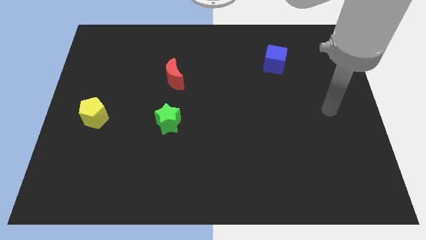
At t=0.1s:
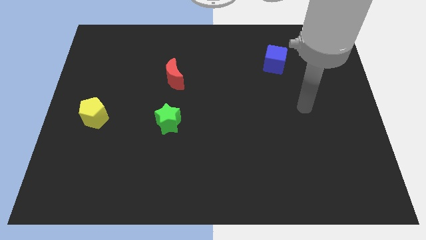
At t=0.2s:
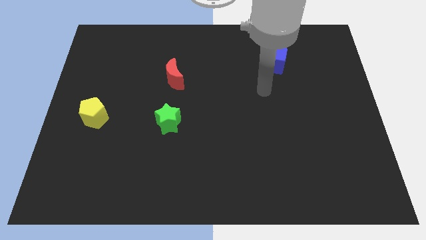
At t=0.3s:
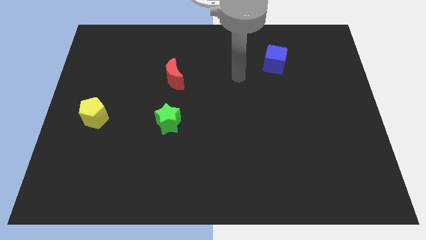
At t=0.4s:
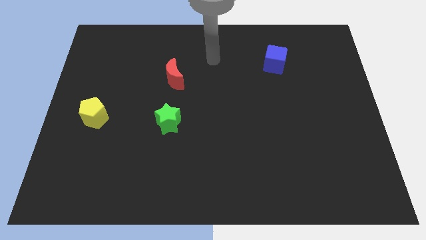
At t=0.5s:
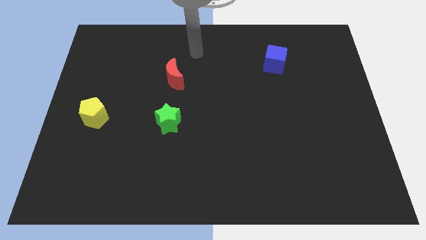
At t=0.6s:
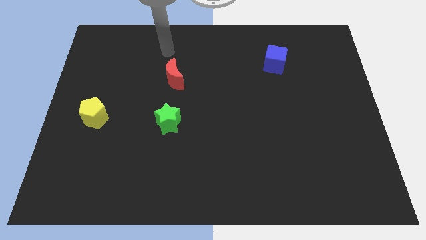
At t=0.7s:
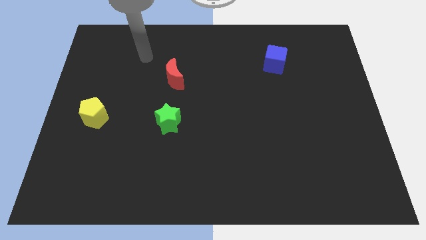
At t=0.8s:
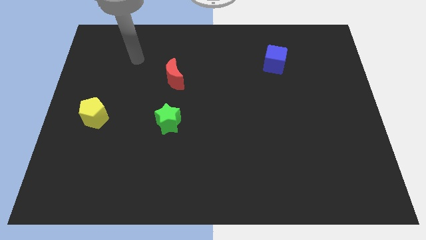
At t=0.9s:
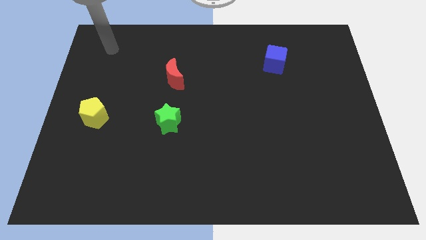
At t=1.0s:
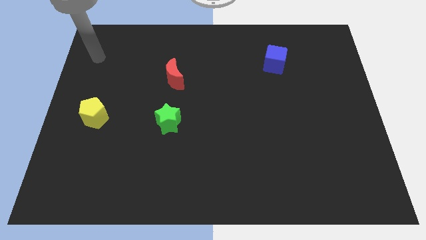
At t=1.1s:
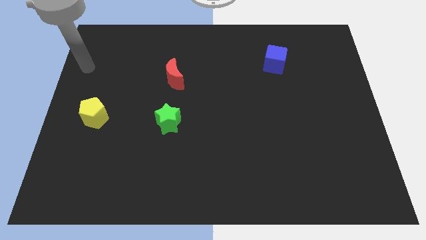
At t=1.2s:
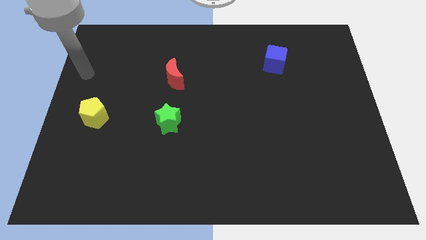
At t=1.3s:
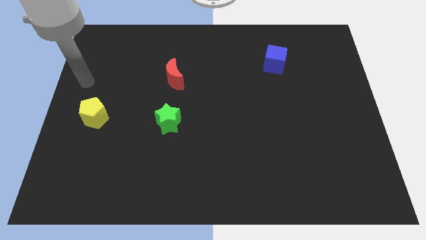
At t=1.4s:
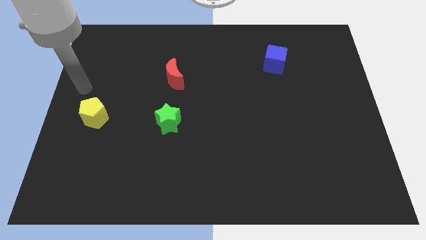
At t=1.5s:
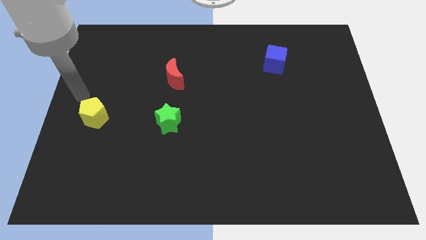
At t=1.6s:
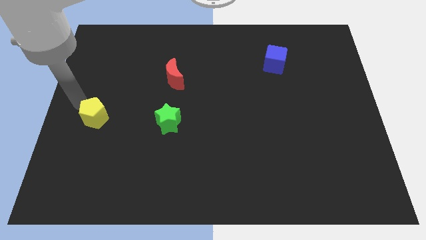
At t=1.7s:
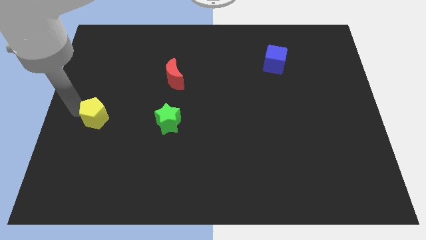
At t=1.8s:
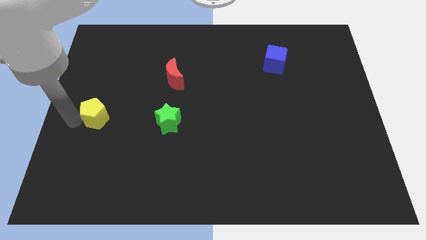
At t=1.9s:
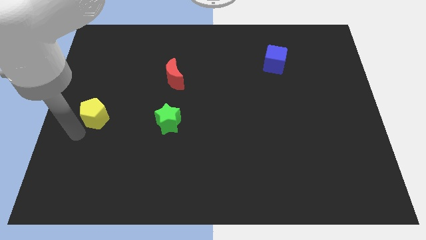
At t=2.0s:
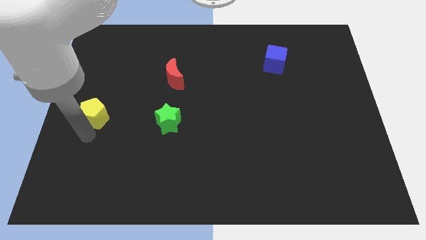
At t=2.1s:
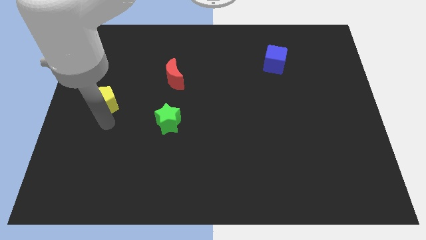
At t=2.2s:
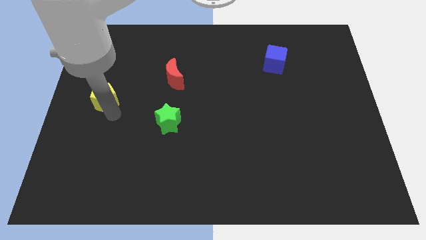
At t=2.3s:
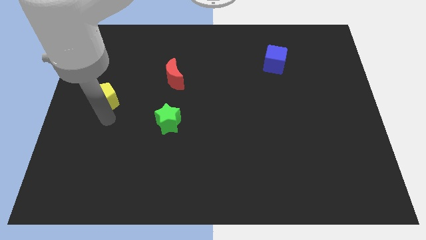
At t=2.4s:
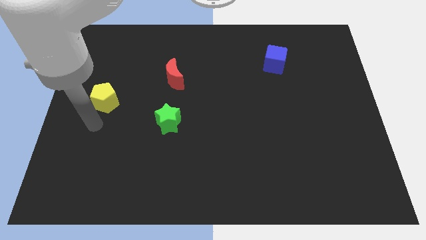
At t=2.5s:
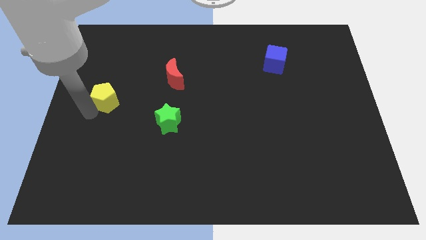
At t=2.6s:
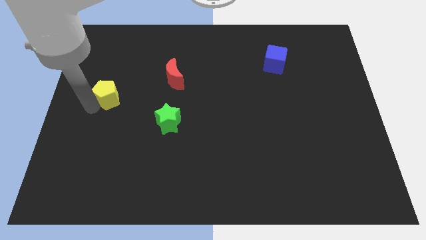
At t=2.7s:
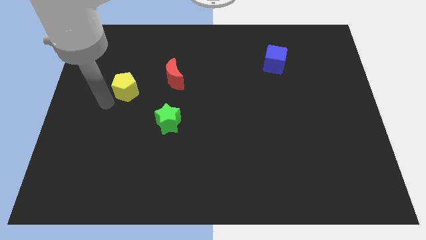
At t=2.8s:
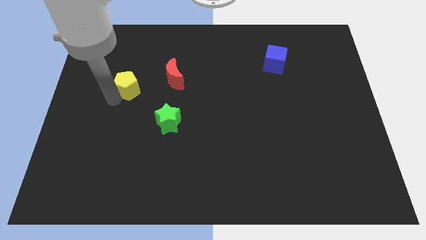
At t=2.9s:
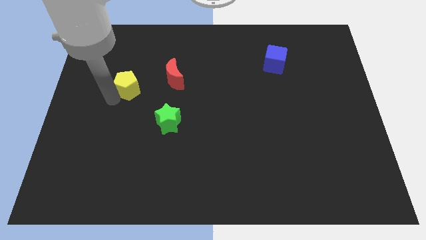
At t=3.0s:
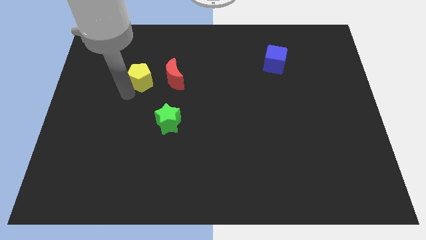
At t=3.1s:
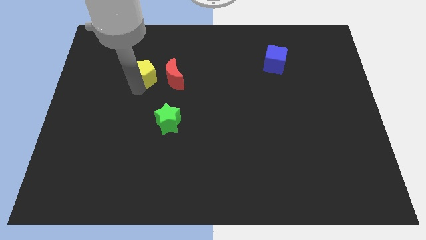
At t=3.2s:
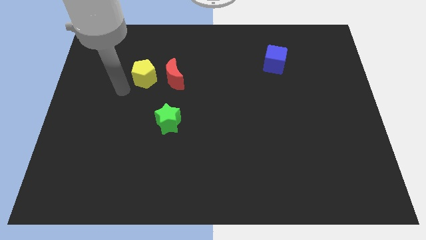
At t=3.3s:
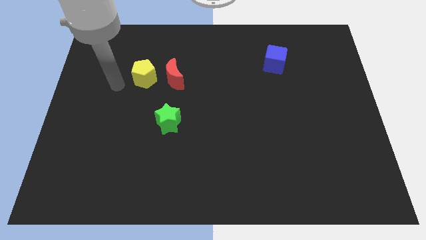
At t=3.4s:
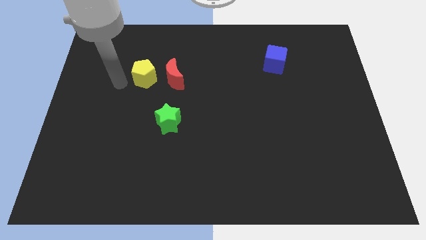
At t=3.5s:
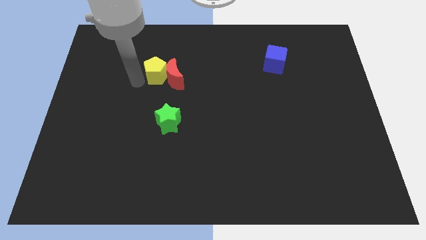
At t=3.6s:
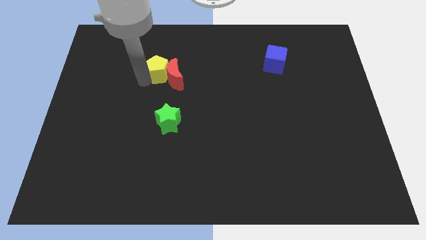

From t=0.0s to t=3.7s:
put the pentagon next to the red moon

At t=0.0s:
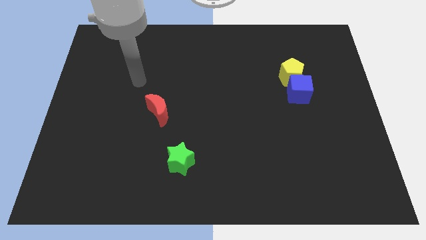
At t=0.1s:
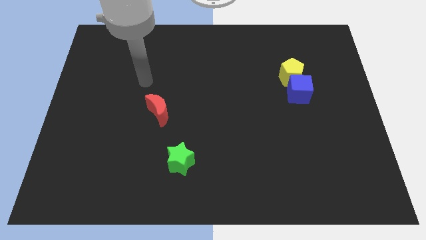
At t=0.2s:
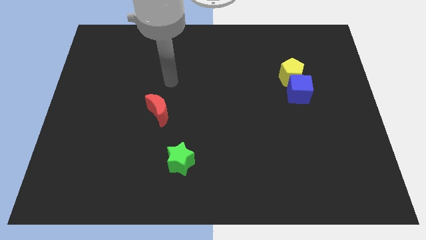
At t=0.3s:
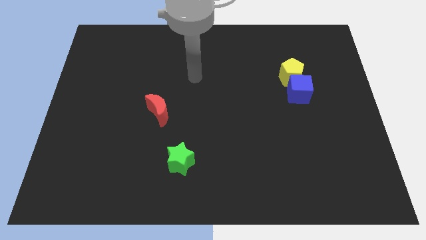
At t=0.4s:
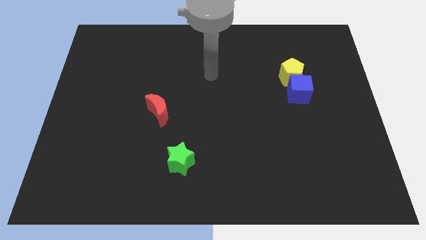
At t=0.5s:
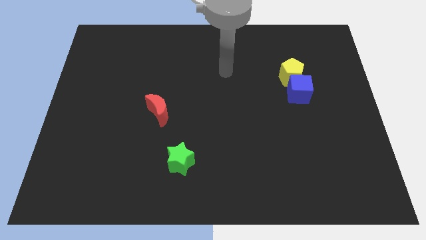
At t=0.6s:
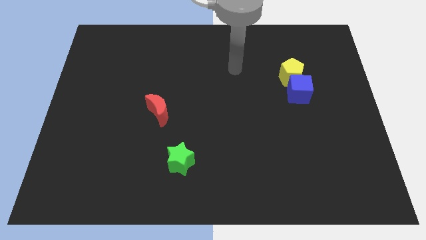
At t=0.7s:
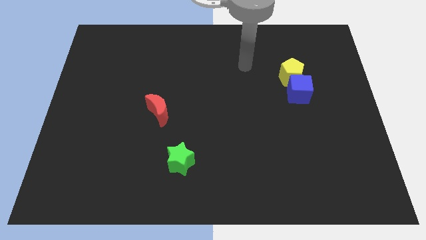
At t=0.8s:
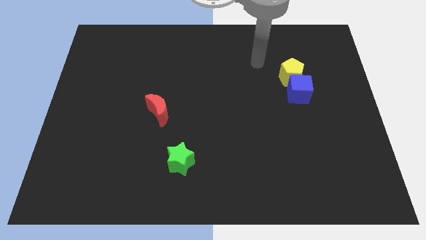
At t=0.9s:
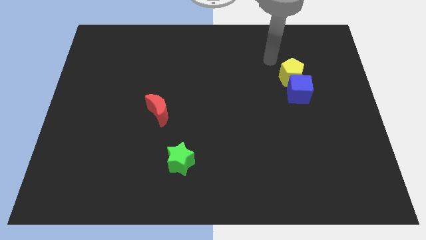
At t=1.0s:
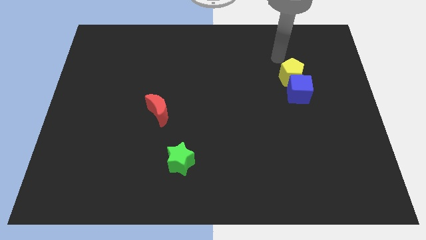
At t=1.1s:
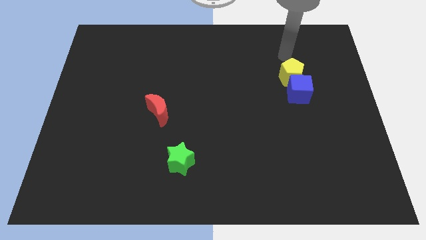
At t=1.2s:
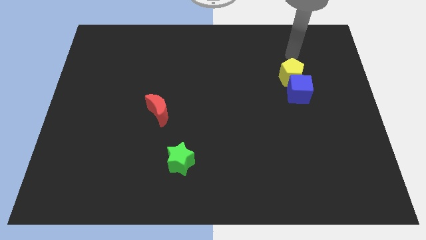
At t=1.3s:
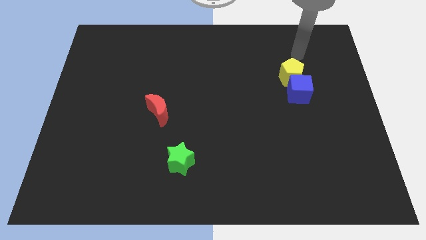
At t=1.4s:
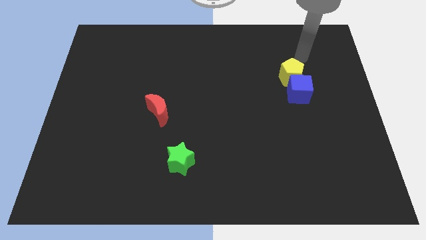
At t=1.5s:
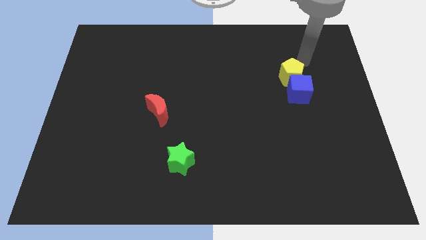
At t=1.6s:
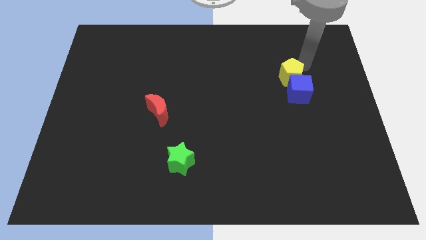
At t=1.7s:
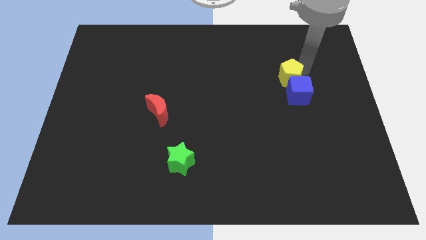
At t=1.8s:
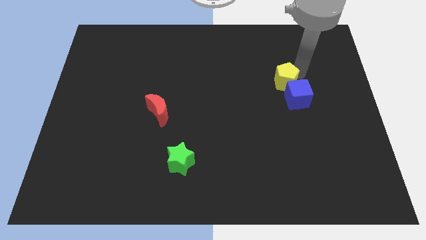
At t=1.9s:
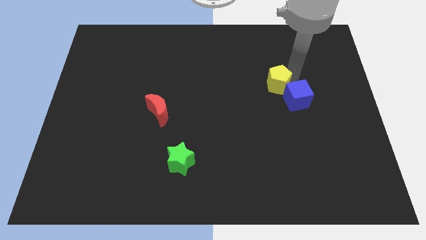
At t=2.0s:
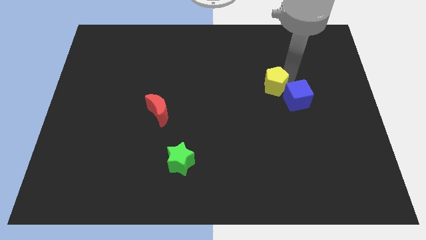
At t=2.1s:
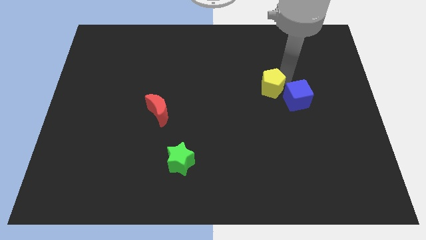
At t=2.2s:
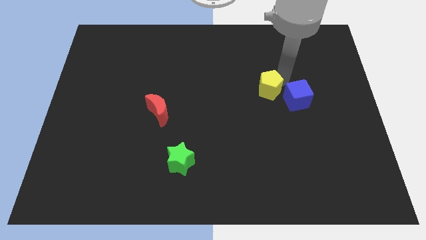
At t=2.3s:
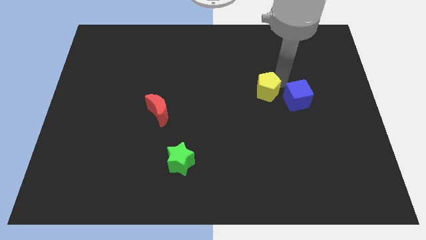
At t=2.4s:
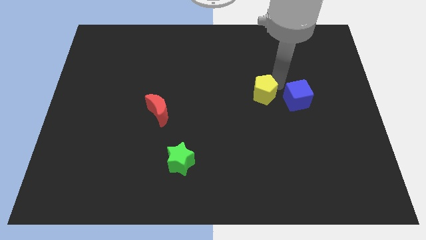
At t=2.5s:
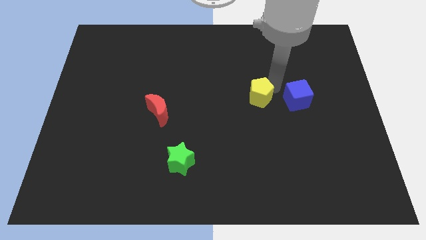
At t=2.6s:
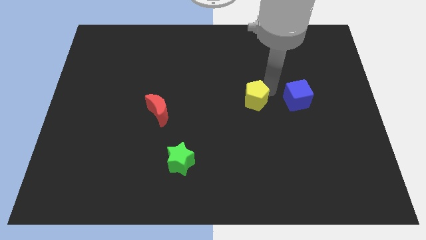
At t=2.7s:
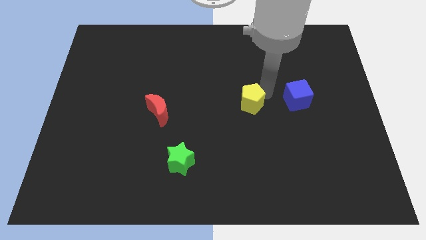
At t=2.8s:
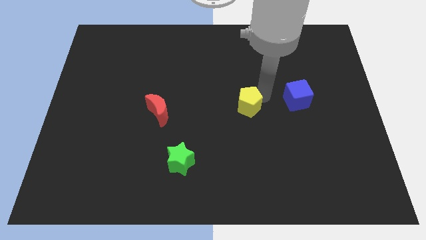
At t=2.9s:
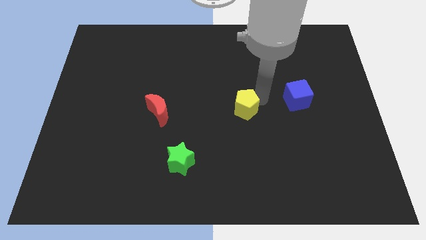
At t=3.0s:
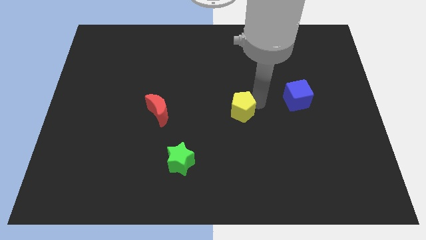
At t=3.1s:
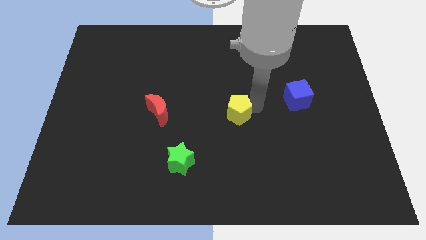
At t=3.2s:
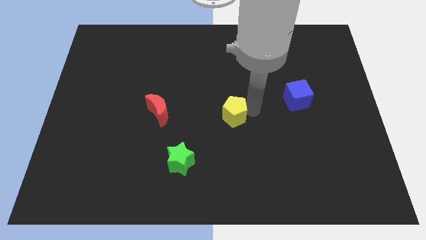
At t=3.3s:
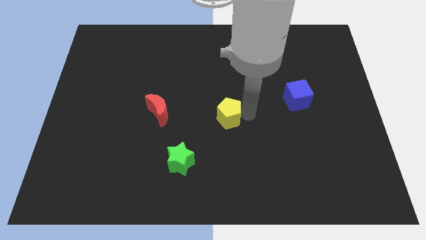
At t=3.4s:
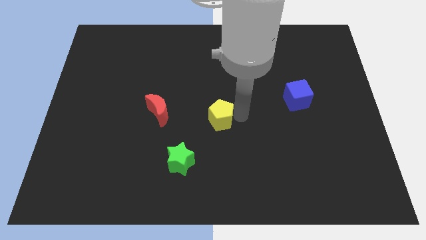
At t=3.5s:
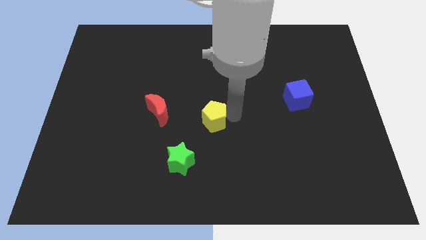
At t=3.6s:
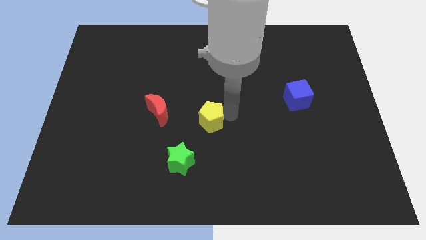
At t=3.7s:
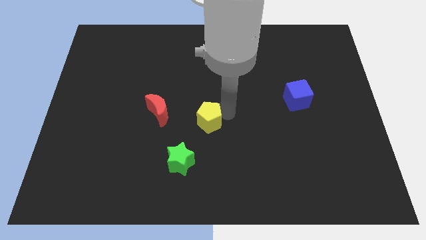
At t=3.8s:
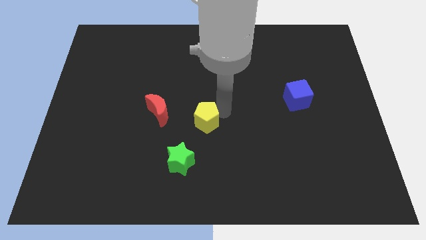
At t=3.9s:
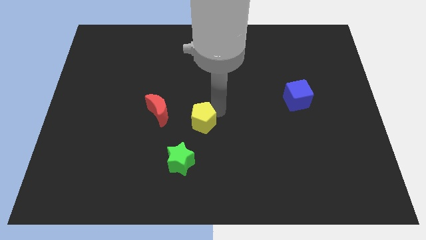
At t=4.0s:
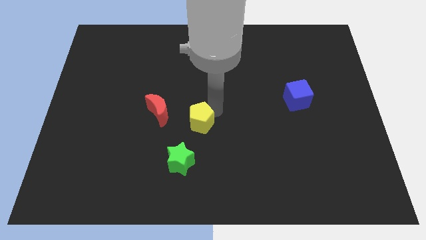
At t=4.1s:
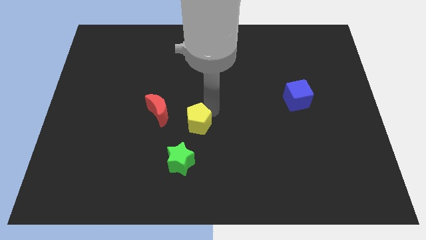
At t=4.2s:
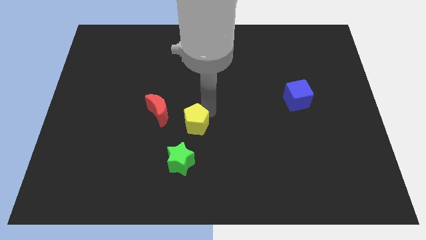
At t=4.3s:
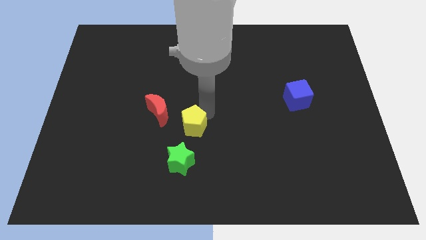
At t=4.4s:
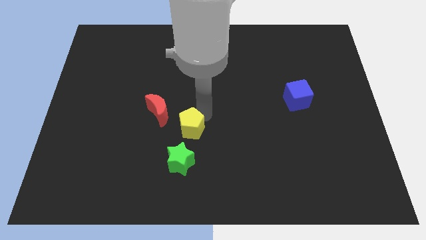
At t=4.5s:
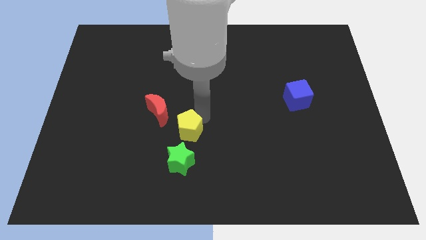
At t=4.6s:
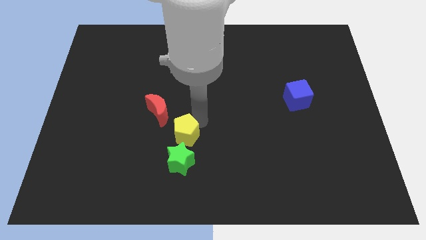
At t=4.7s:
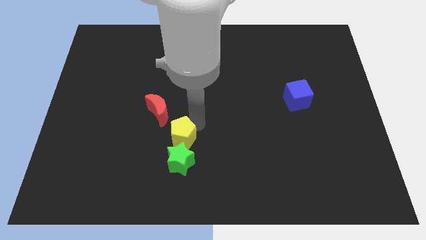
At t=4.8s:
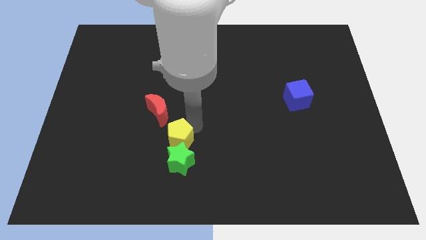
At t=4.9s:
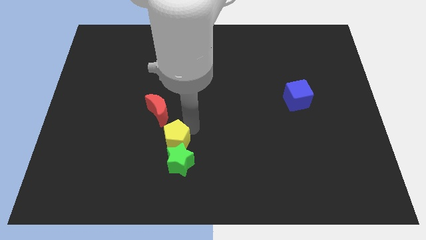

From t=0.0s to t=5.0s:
move the yellow pentagon close to the green star

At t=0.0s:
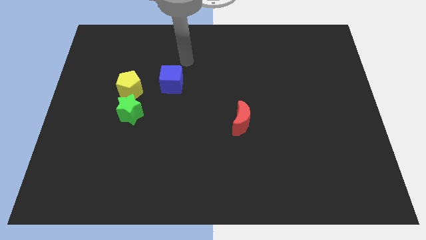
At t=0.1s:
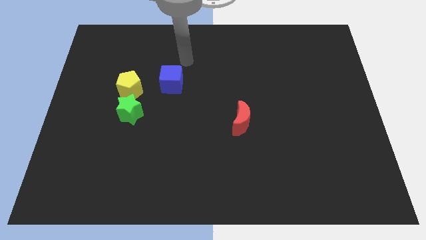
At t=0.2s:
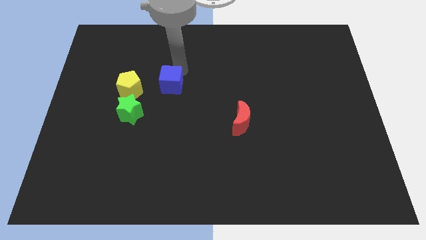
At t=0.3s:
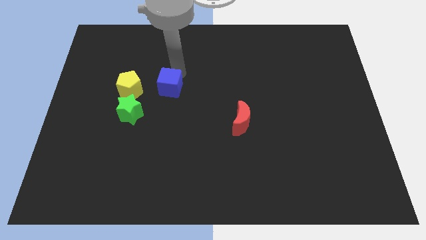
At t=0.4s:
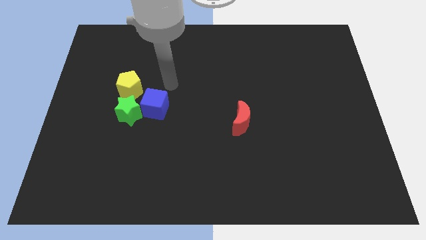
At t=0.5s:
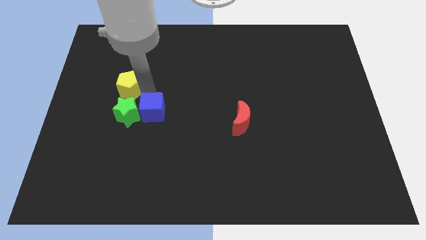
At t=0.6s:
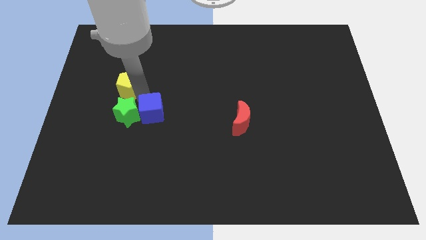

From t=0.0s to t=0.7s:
push the blue cube close to the green block
